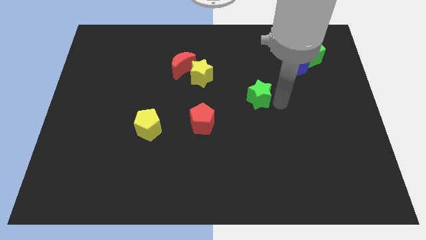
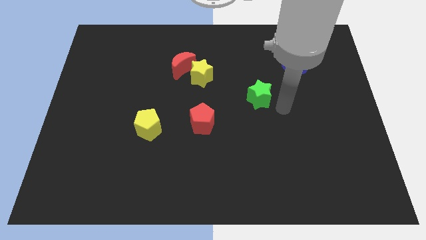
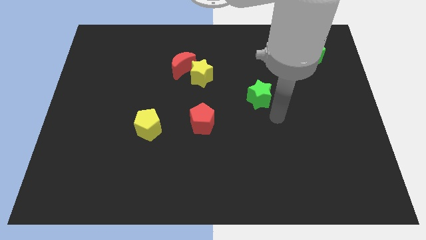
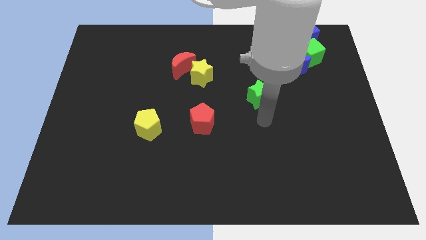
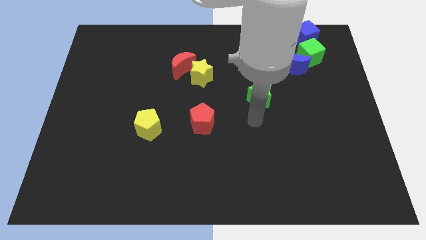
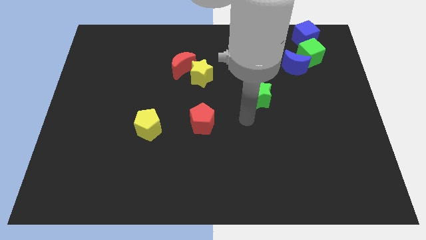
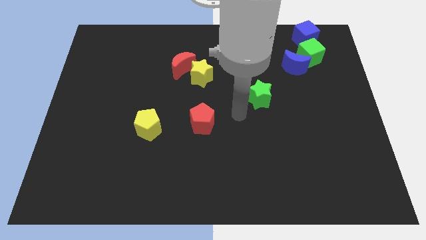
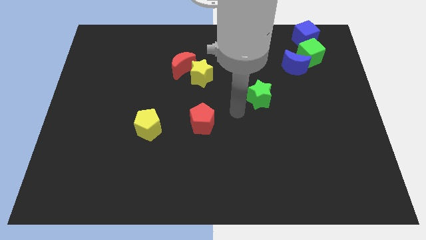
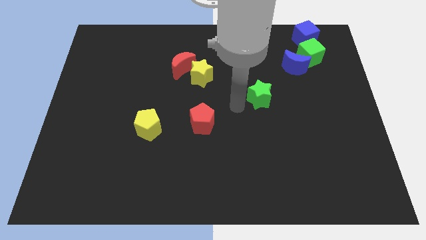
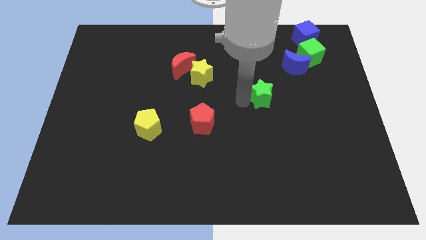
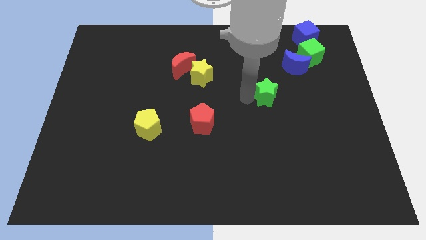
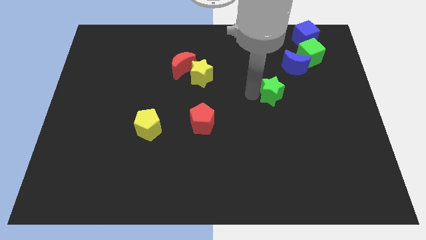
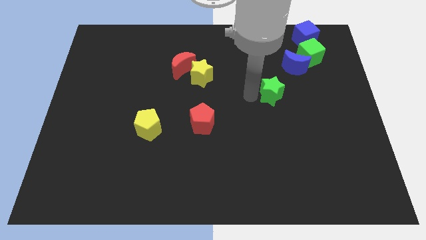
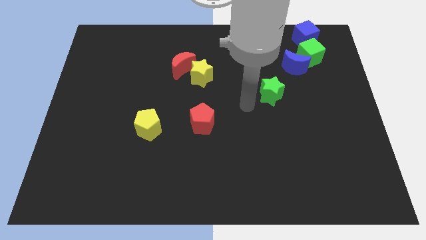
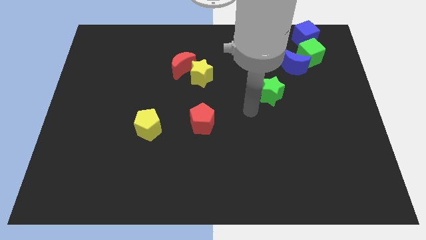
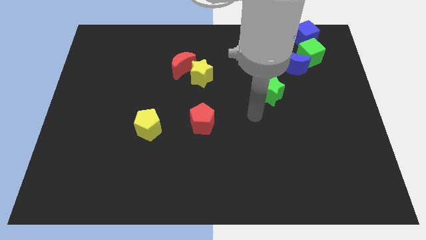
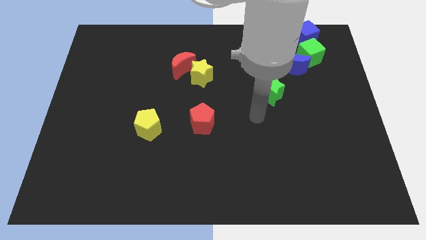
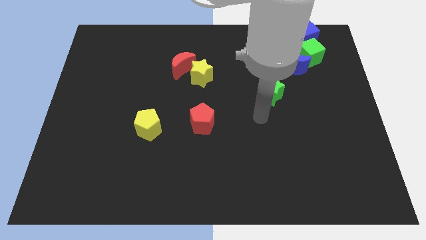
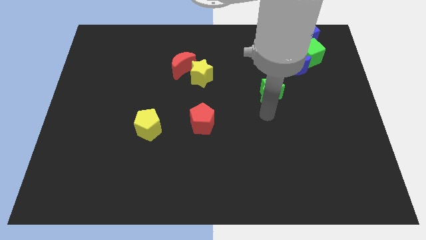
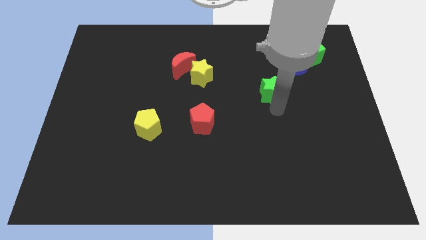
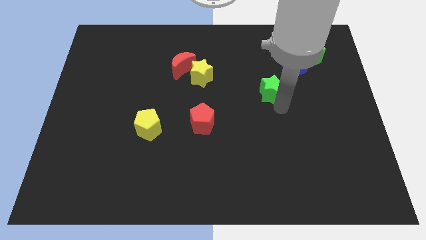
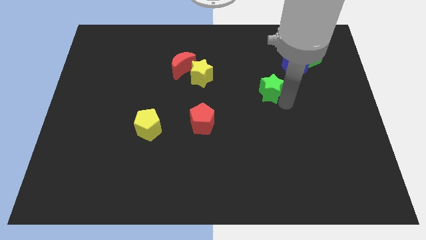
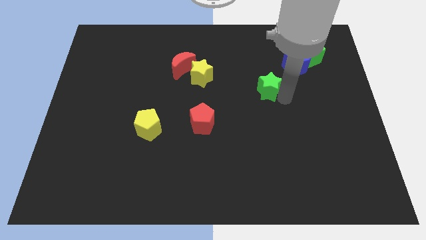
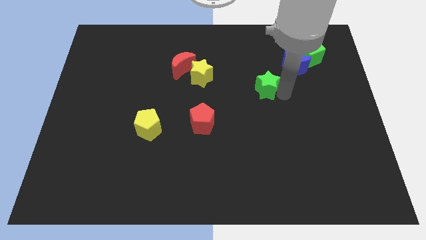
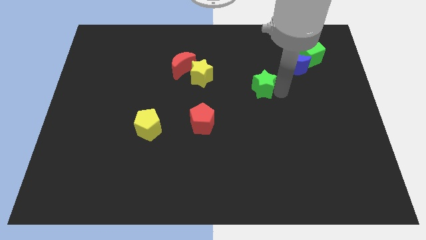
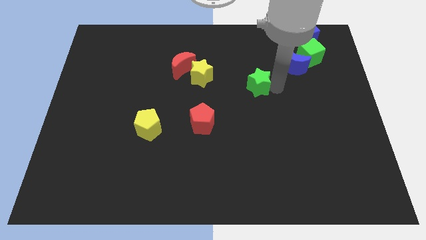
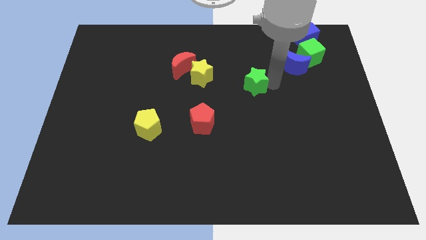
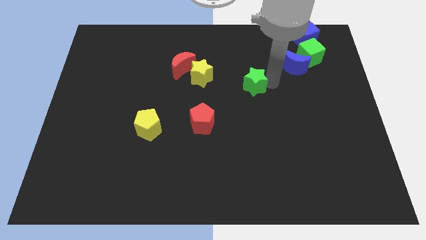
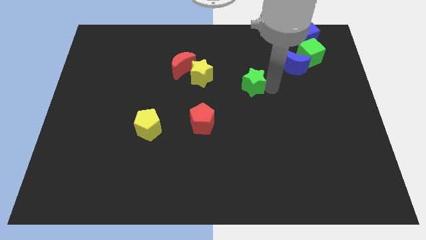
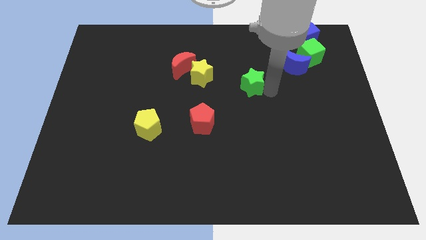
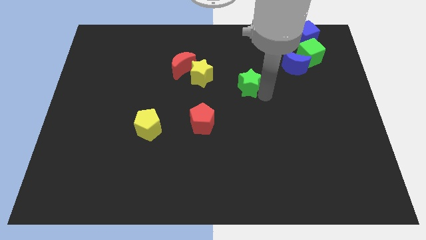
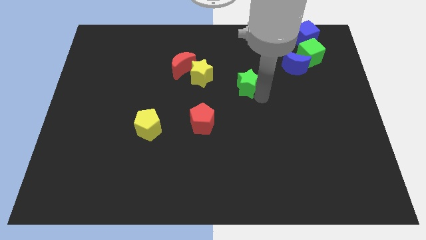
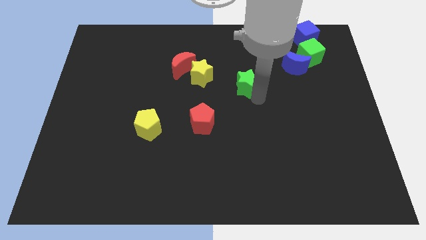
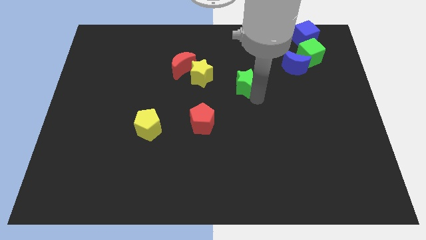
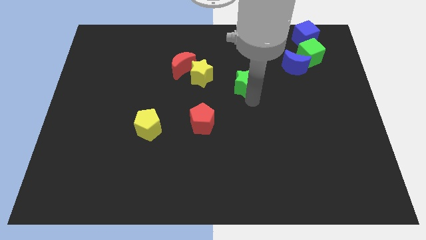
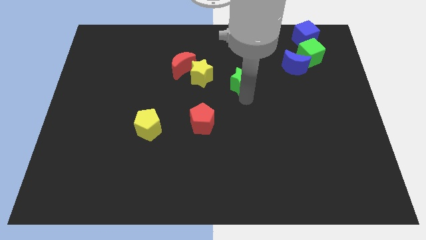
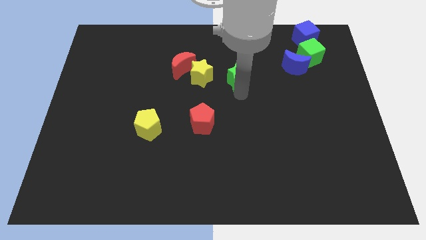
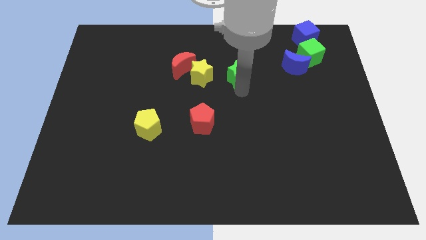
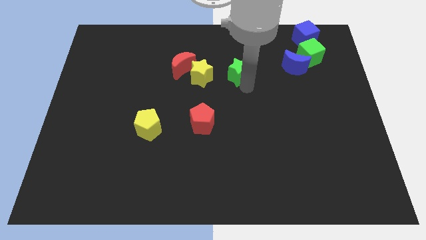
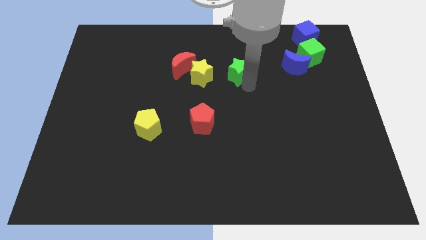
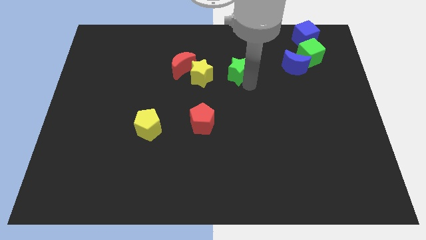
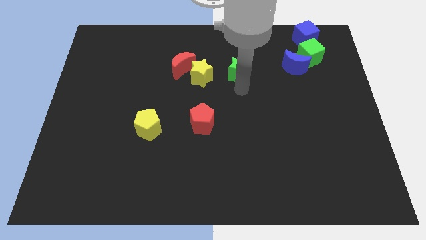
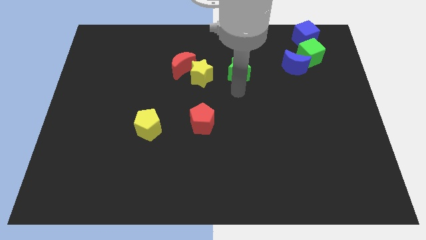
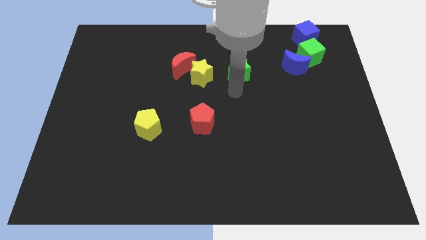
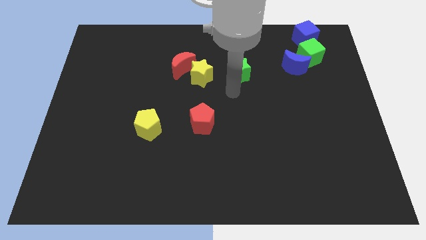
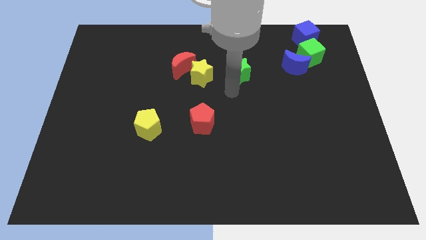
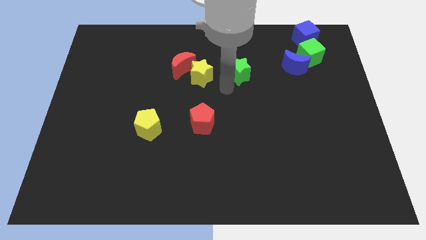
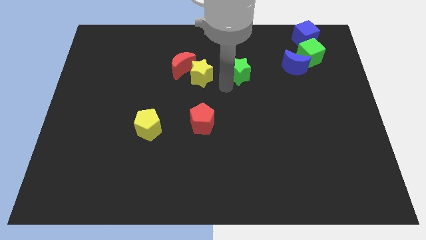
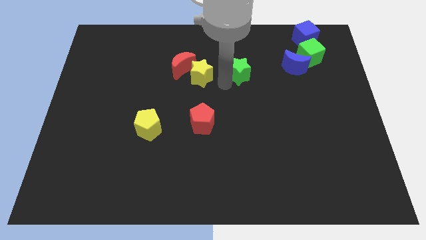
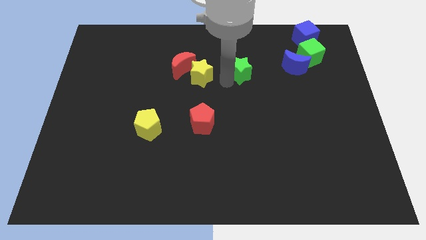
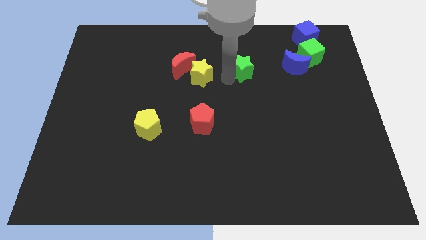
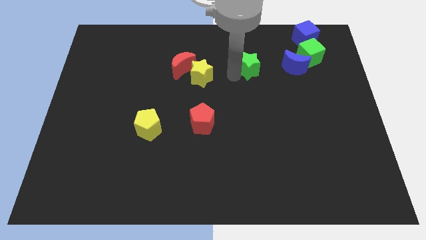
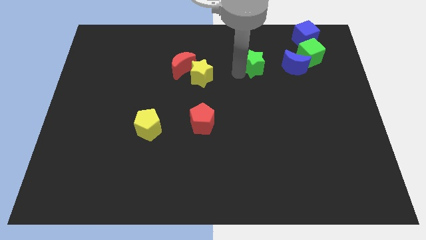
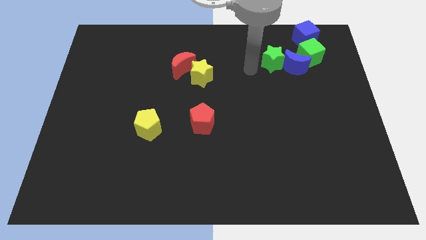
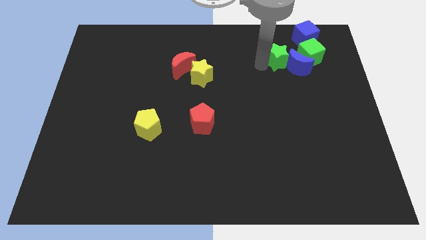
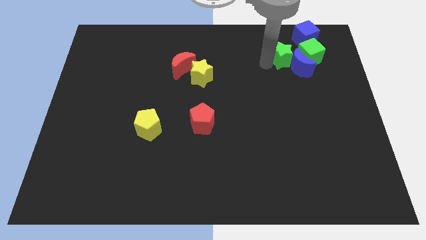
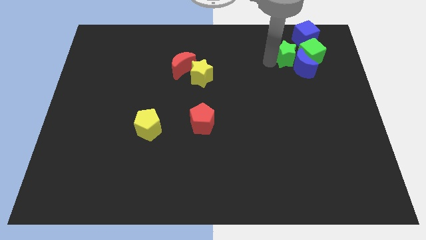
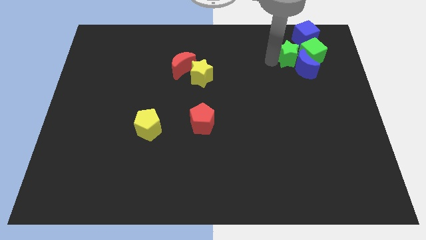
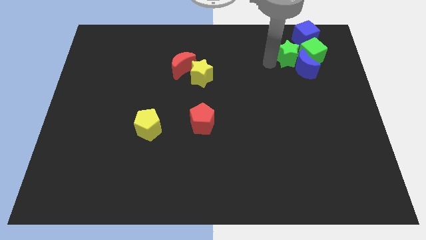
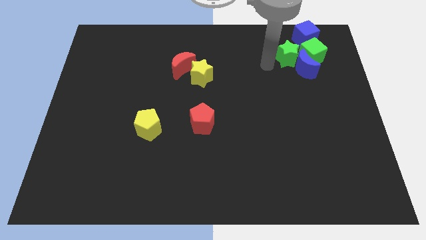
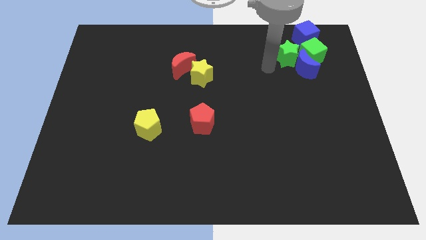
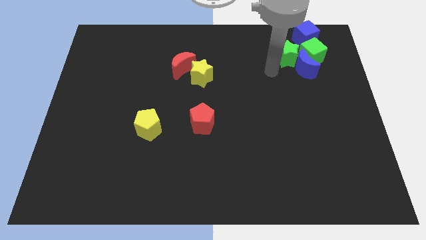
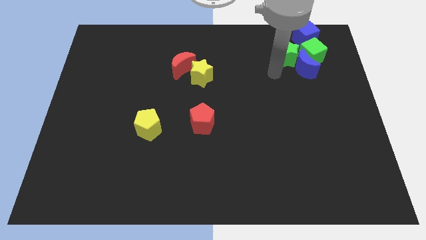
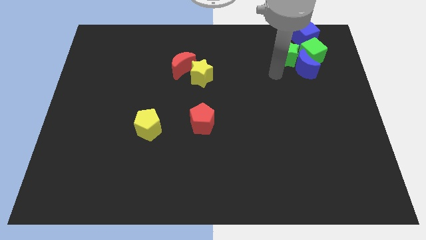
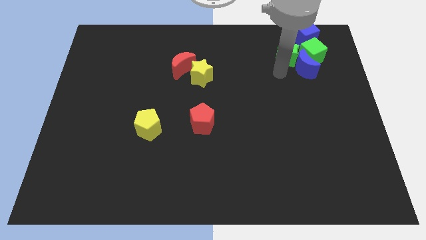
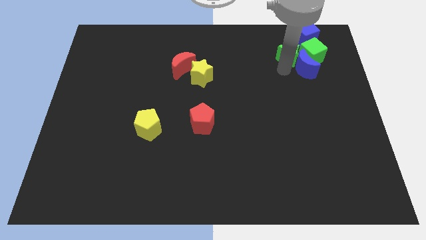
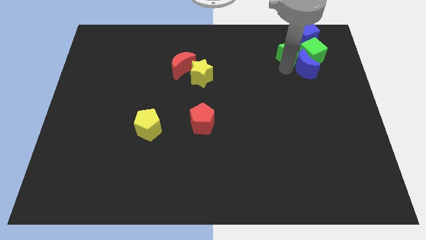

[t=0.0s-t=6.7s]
push the green star into the blue moon and green cube

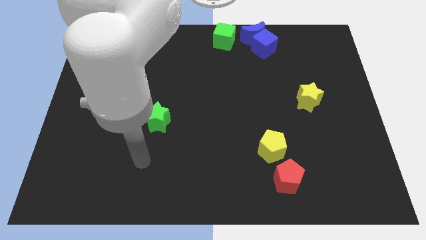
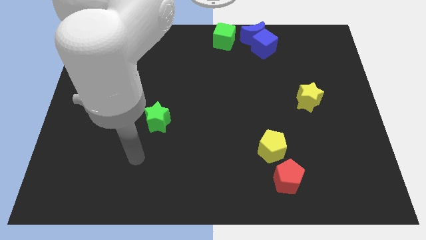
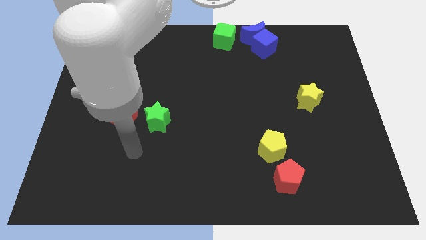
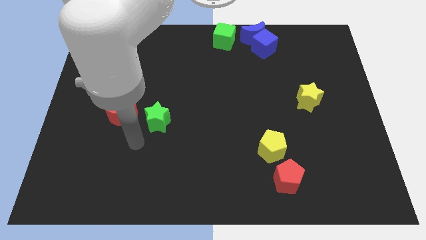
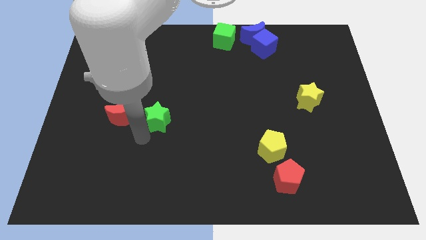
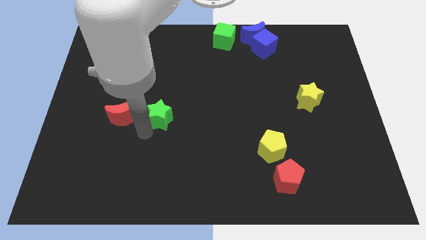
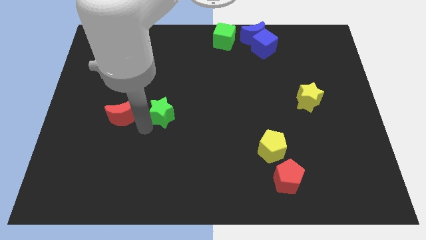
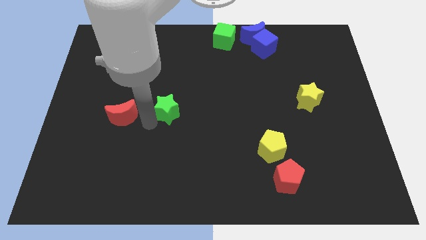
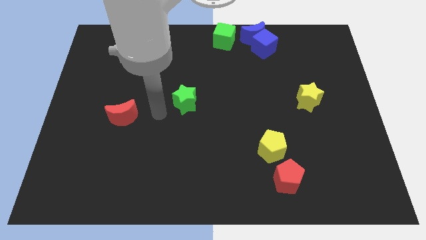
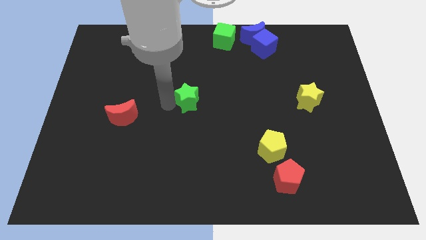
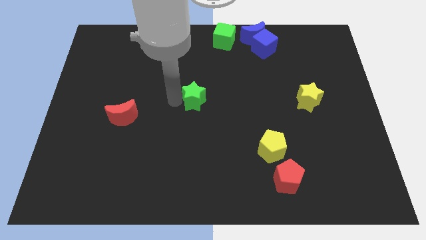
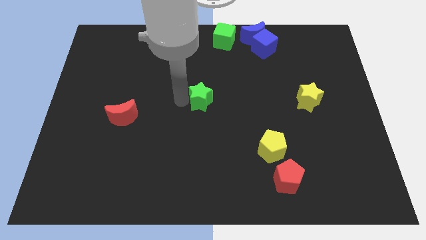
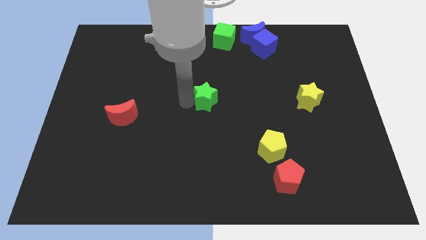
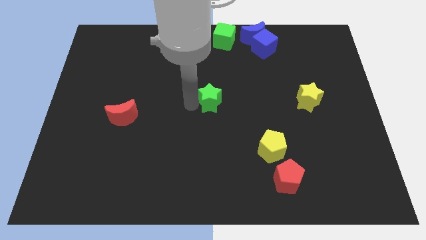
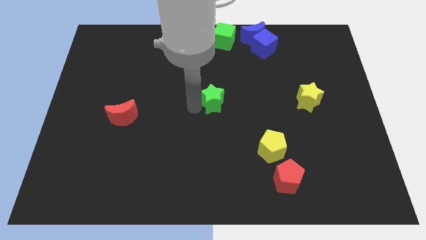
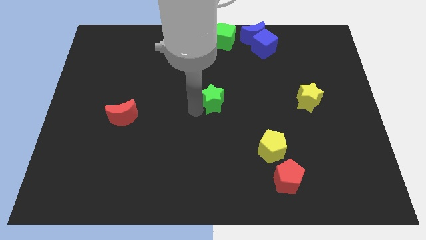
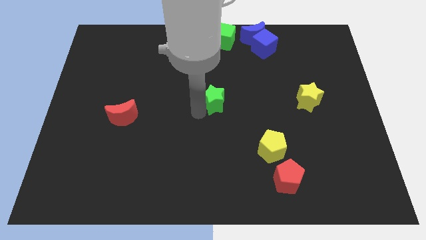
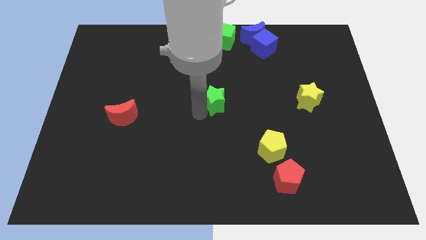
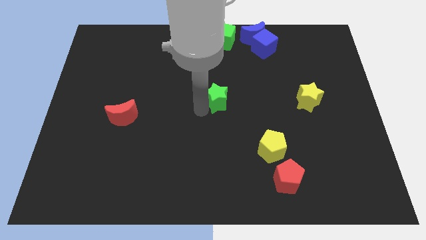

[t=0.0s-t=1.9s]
put the green star vertically below the green cube

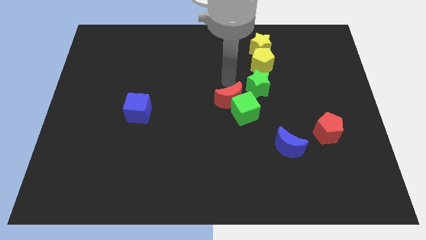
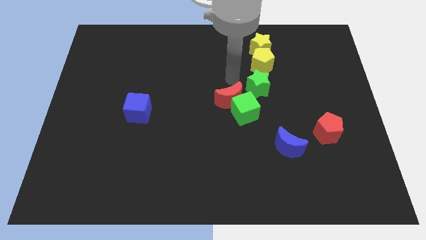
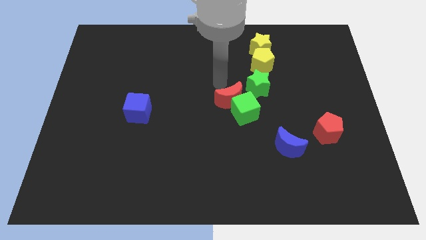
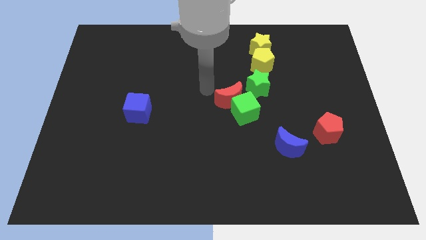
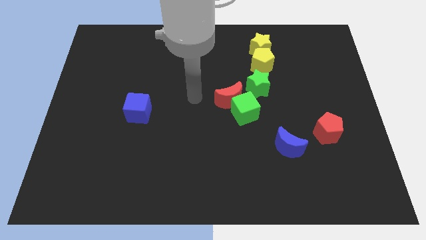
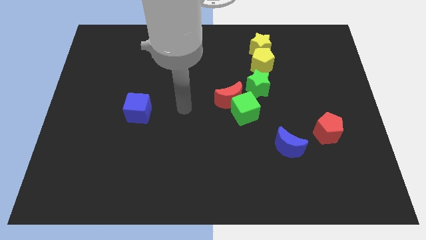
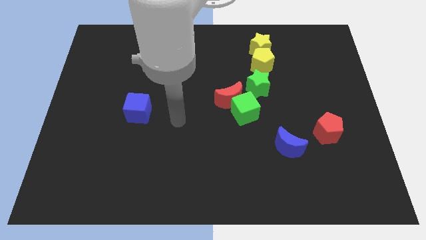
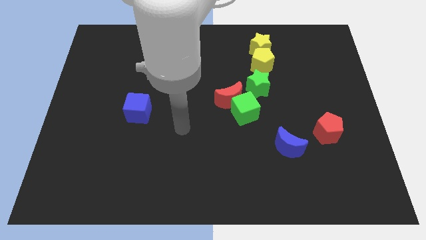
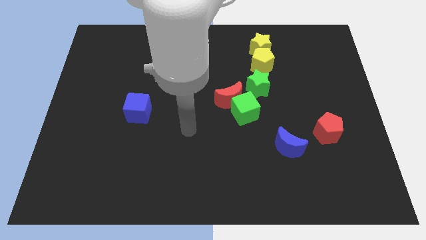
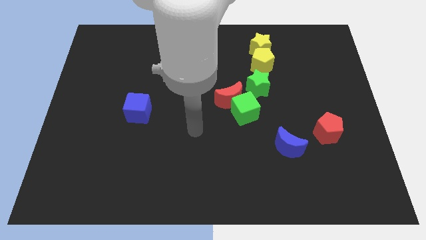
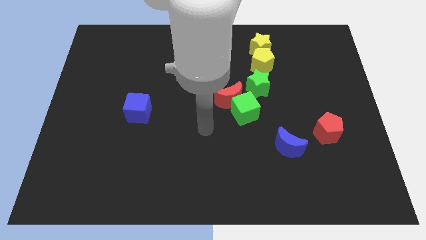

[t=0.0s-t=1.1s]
move your arm towards the green cube
